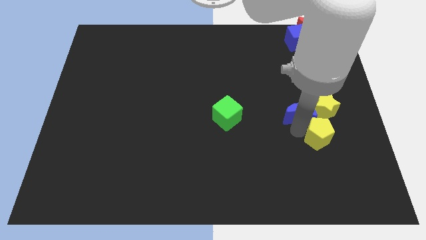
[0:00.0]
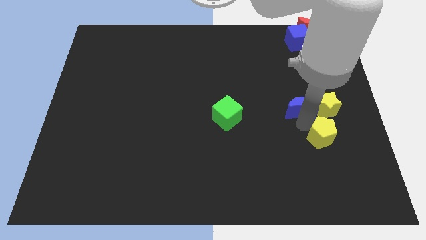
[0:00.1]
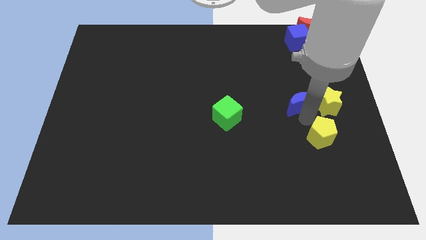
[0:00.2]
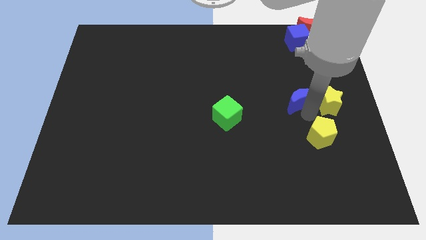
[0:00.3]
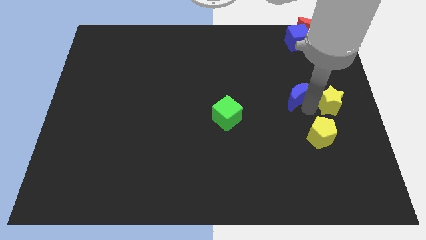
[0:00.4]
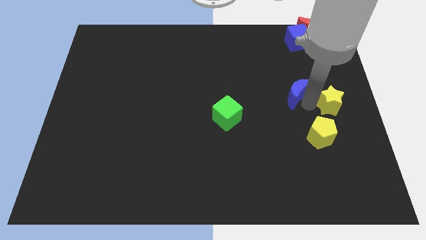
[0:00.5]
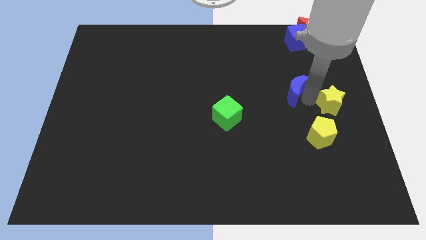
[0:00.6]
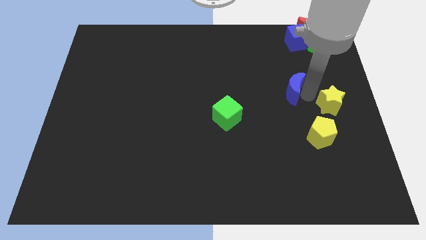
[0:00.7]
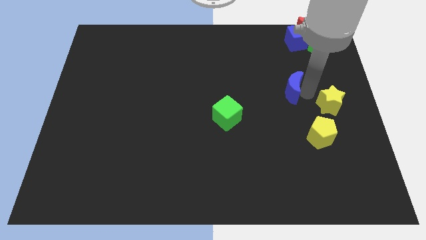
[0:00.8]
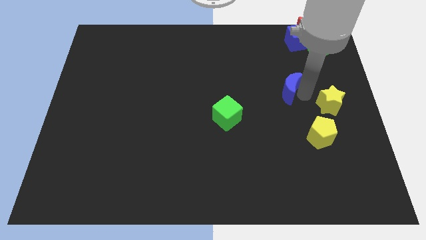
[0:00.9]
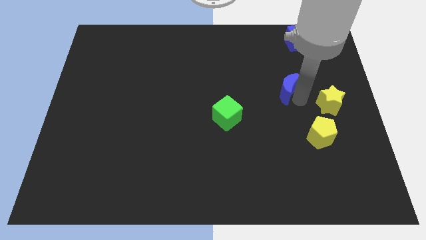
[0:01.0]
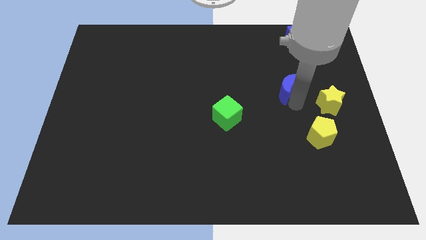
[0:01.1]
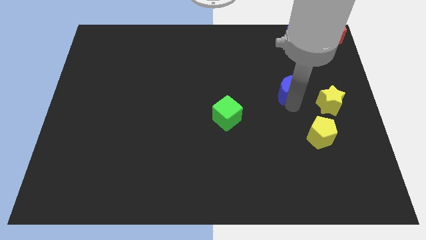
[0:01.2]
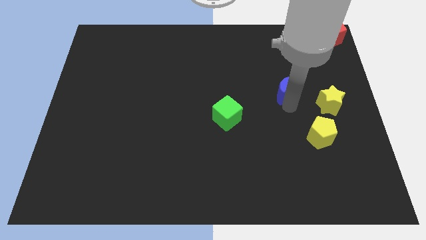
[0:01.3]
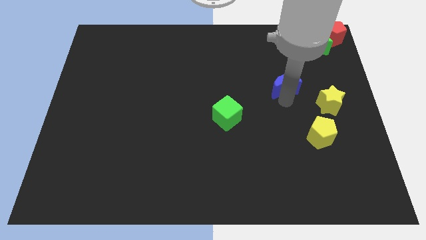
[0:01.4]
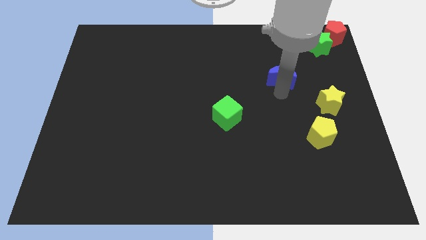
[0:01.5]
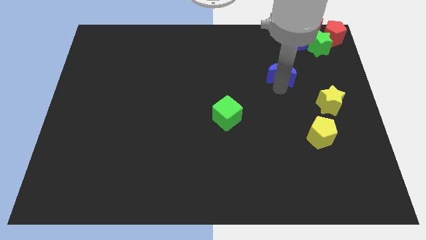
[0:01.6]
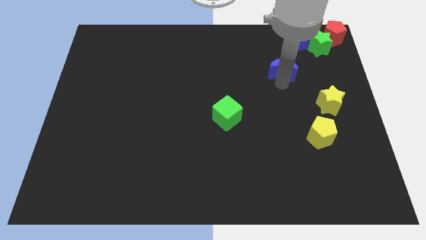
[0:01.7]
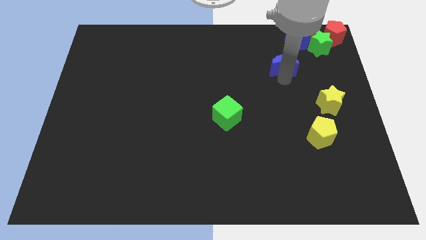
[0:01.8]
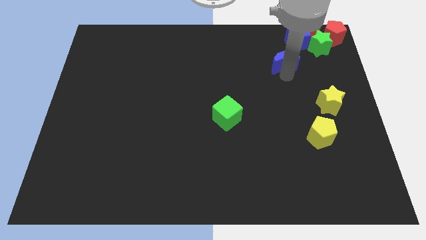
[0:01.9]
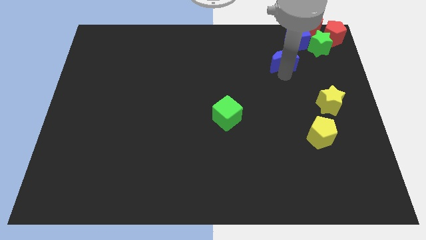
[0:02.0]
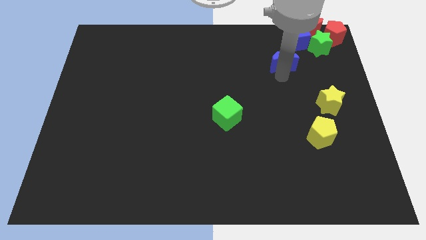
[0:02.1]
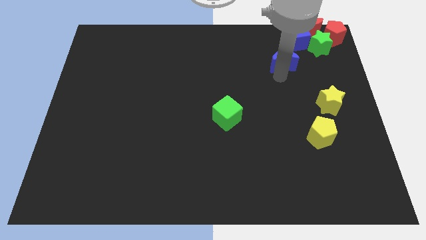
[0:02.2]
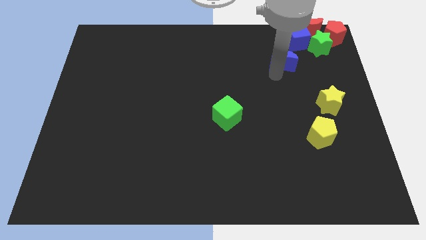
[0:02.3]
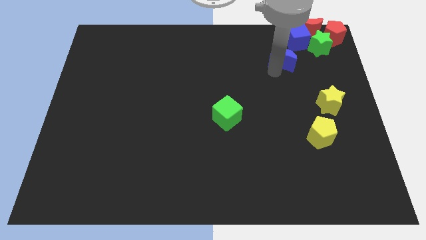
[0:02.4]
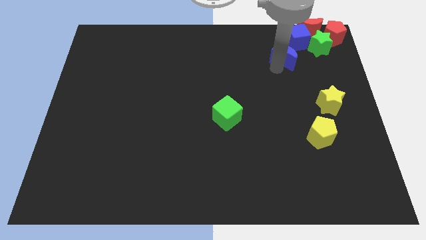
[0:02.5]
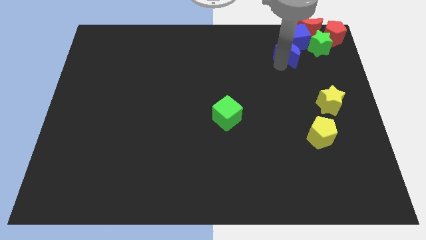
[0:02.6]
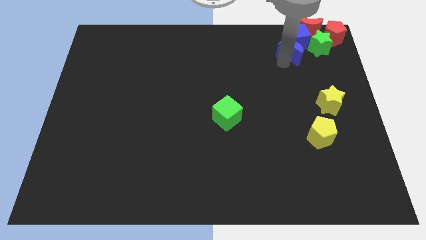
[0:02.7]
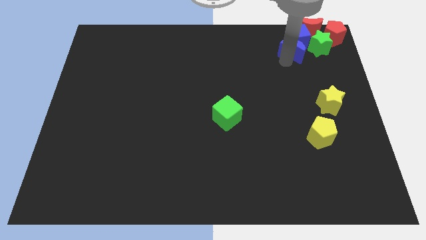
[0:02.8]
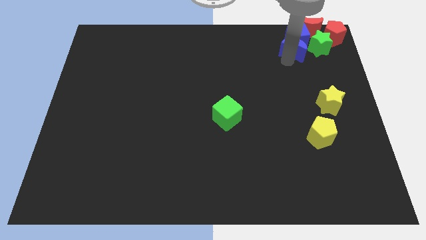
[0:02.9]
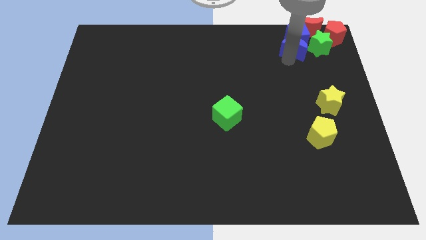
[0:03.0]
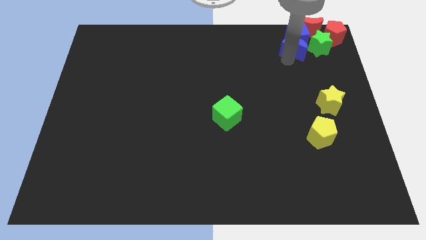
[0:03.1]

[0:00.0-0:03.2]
move the blue crescent to the bottom of the blue cube

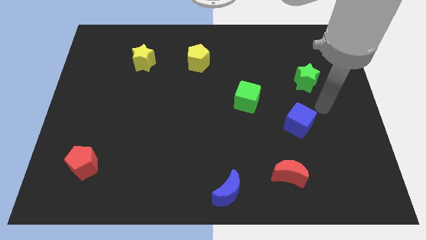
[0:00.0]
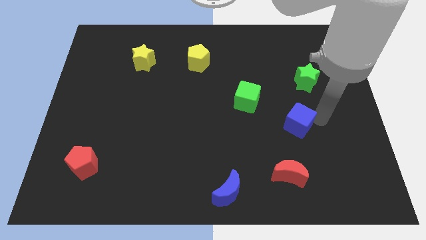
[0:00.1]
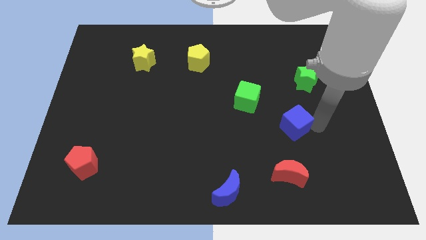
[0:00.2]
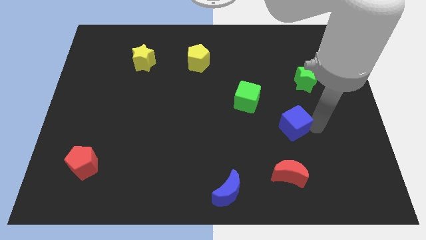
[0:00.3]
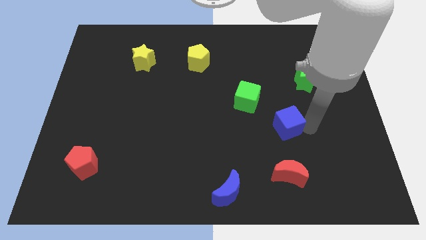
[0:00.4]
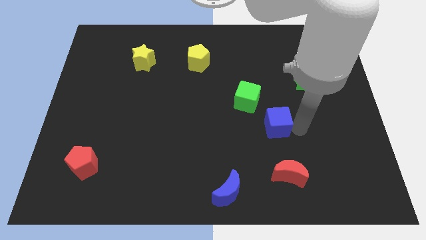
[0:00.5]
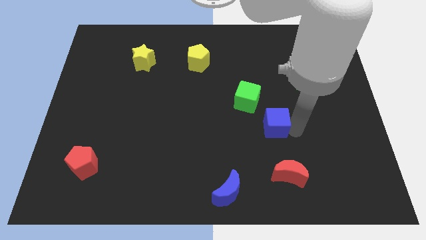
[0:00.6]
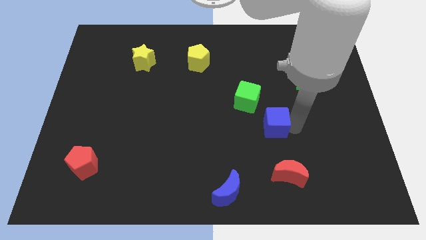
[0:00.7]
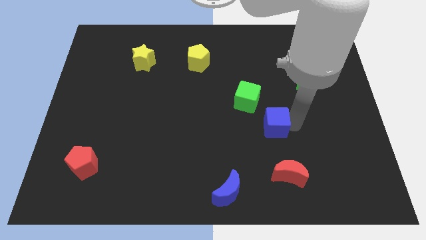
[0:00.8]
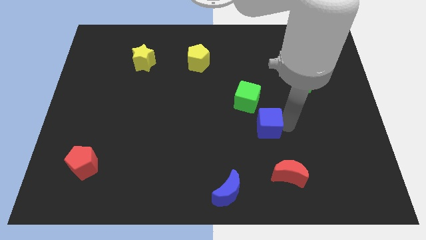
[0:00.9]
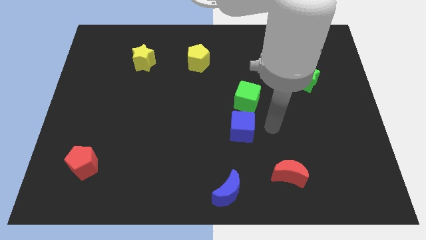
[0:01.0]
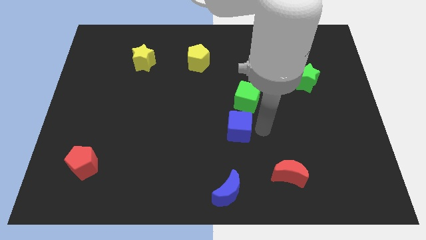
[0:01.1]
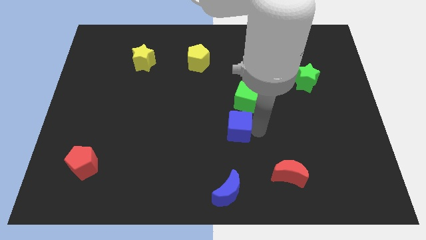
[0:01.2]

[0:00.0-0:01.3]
place the blue cube below the green cube

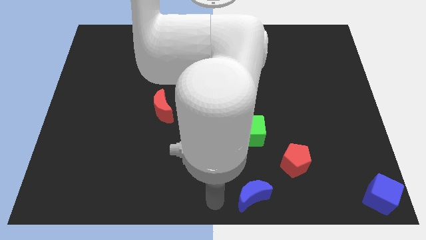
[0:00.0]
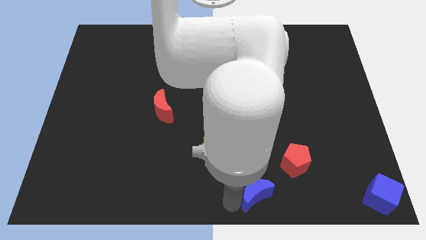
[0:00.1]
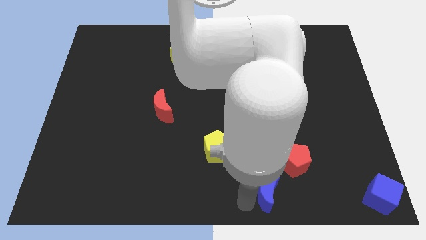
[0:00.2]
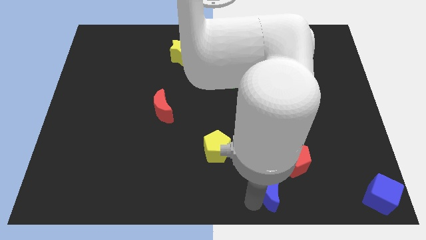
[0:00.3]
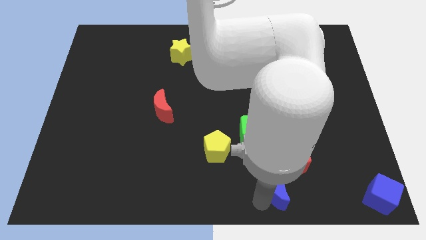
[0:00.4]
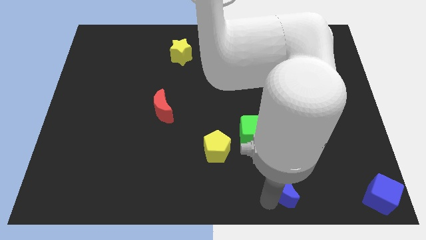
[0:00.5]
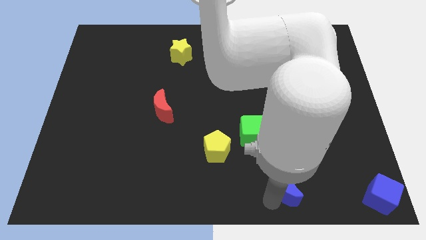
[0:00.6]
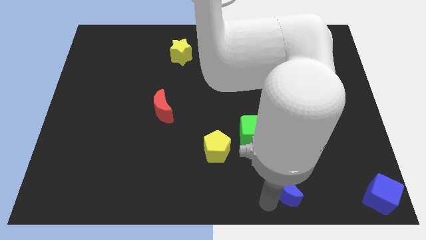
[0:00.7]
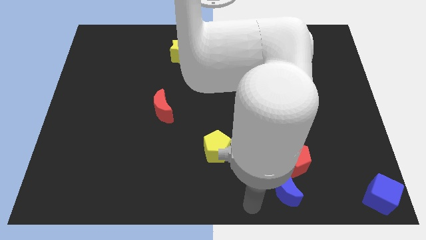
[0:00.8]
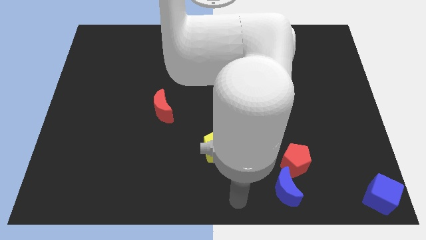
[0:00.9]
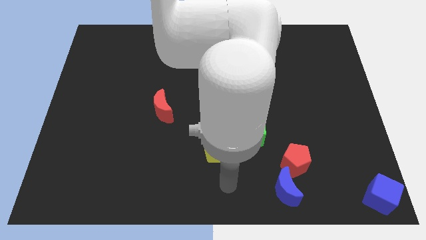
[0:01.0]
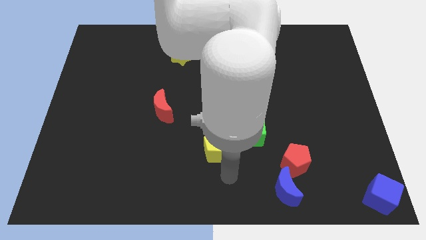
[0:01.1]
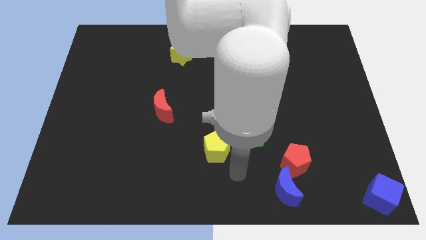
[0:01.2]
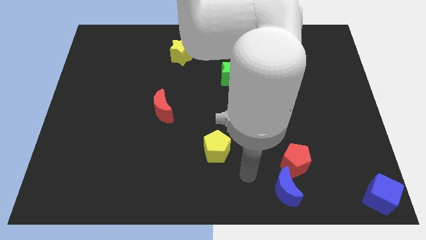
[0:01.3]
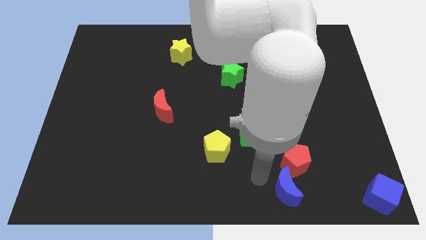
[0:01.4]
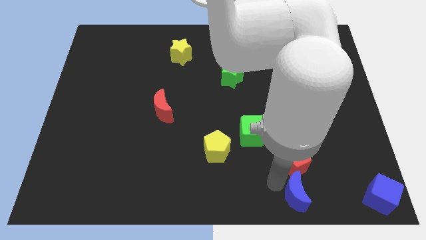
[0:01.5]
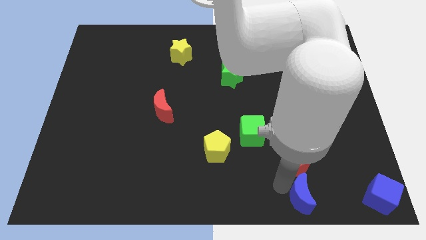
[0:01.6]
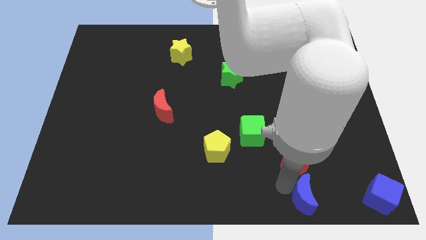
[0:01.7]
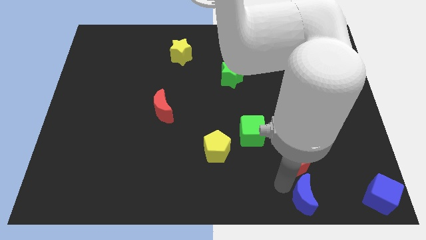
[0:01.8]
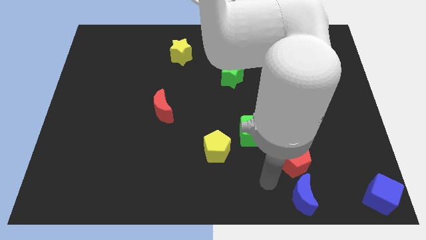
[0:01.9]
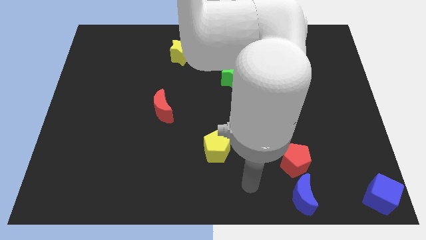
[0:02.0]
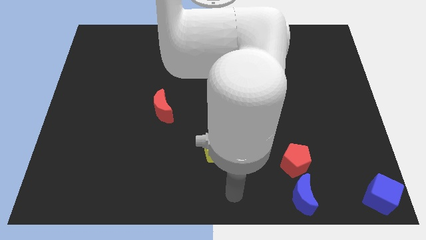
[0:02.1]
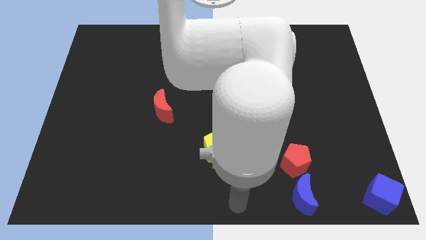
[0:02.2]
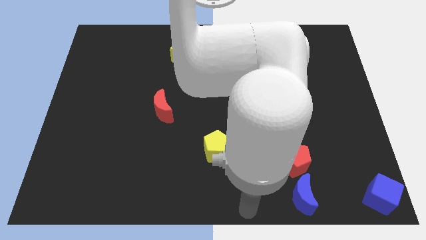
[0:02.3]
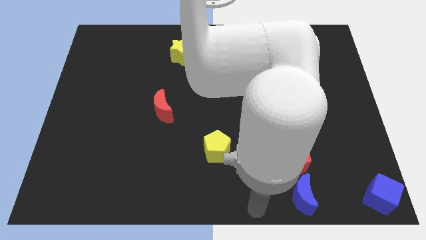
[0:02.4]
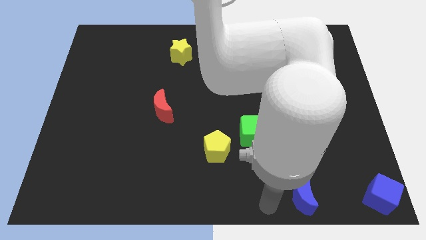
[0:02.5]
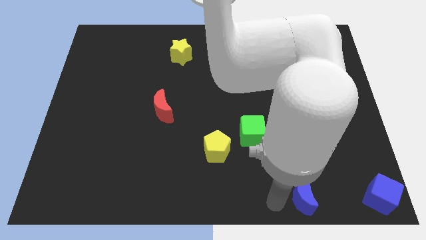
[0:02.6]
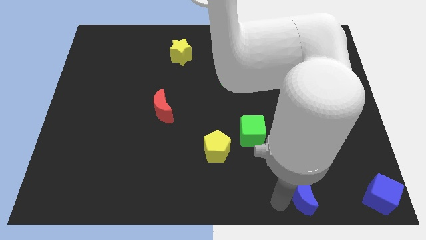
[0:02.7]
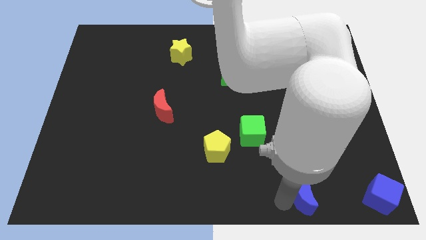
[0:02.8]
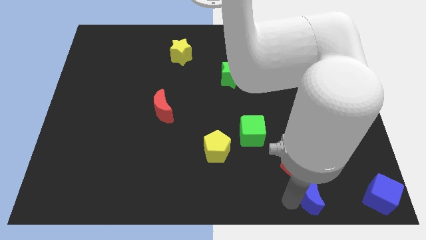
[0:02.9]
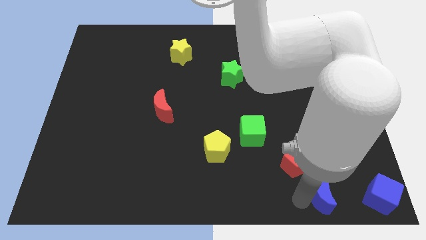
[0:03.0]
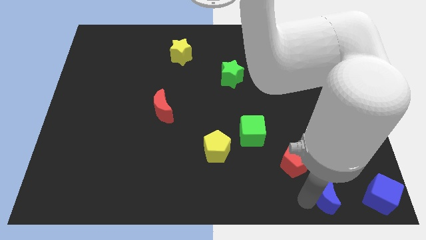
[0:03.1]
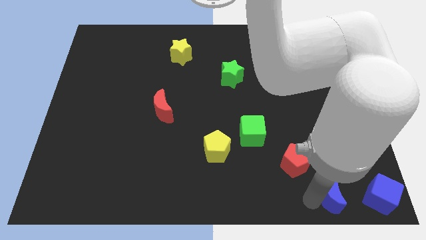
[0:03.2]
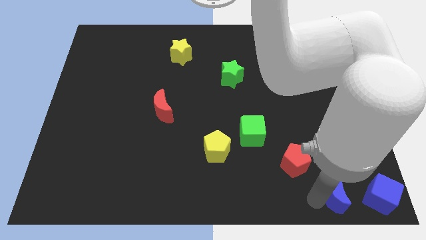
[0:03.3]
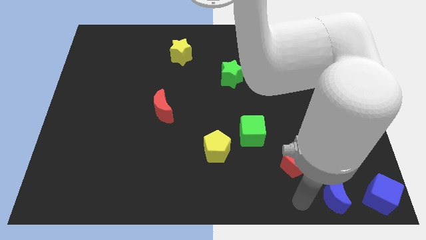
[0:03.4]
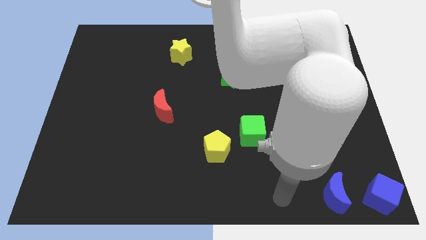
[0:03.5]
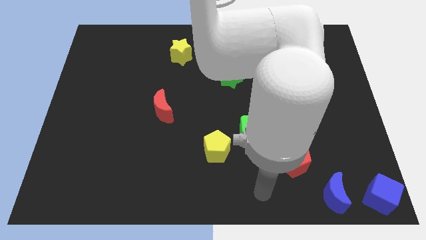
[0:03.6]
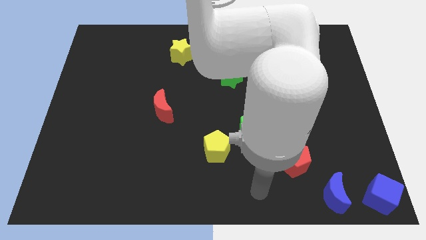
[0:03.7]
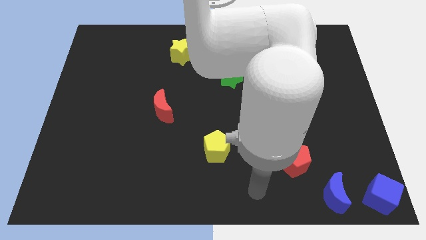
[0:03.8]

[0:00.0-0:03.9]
slide the blue moon to the left side of blue cube

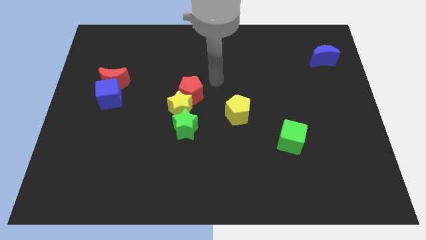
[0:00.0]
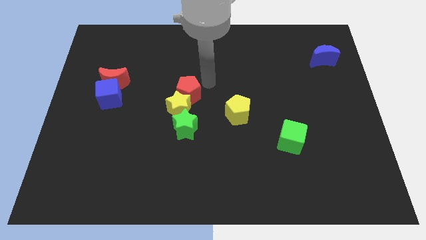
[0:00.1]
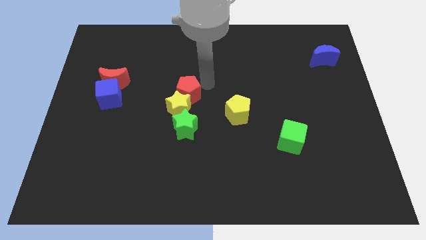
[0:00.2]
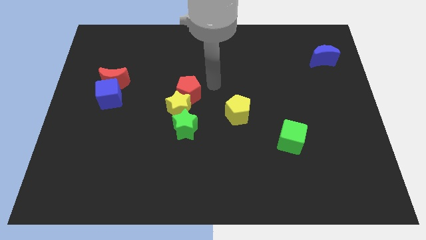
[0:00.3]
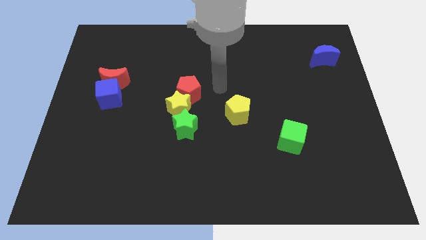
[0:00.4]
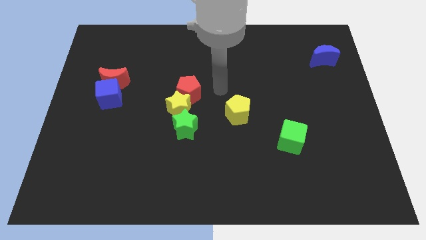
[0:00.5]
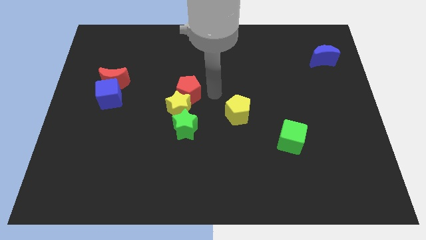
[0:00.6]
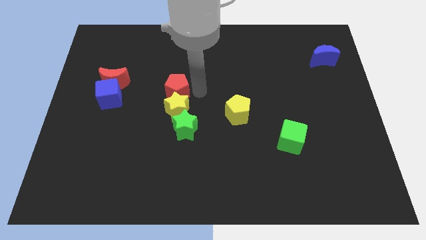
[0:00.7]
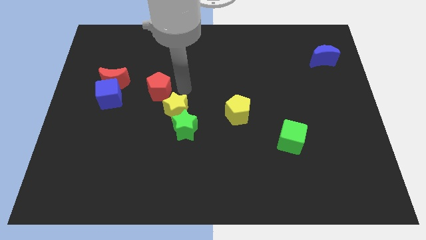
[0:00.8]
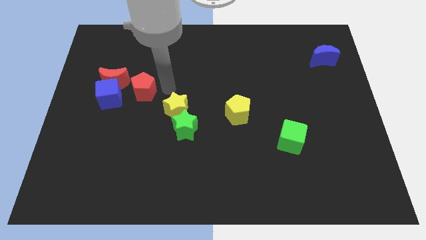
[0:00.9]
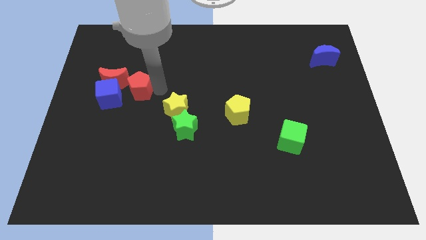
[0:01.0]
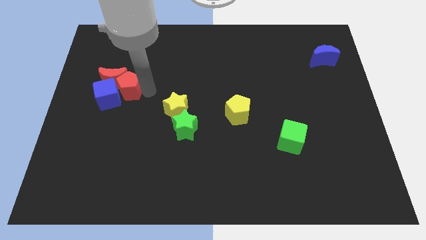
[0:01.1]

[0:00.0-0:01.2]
push the red pentagon to the right of the blue cube
